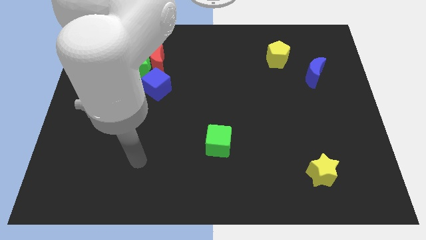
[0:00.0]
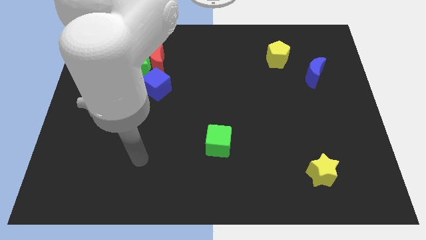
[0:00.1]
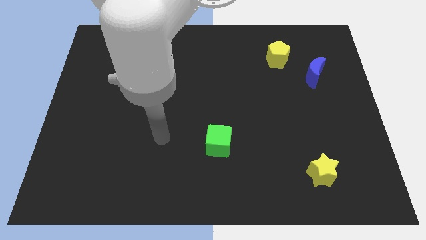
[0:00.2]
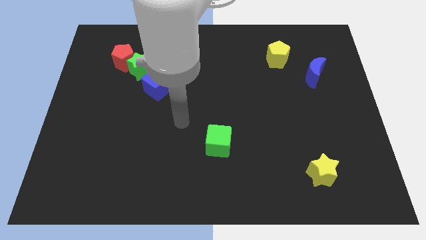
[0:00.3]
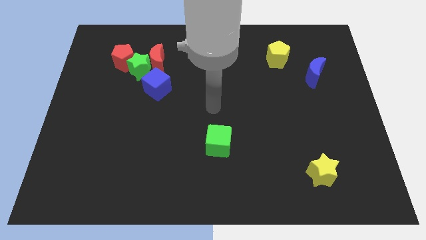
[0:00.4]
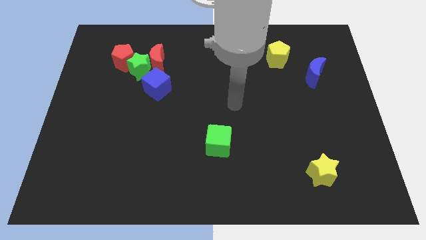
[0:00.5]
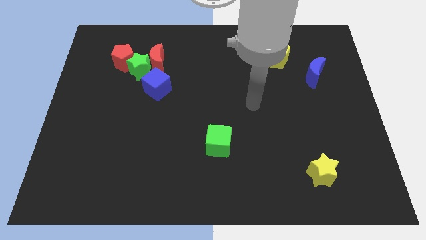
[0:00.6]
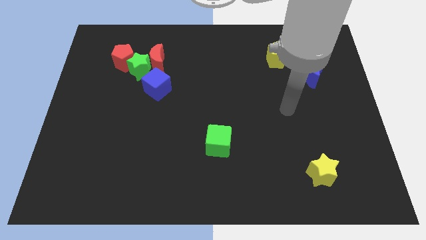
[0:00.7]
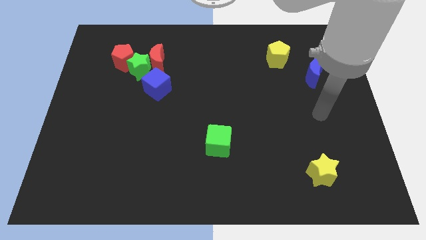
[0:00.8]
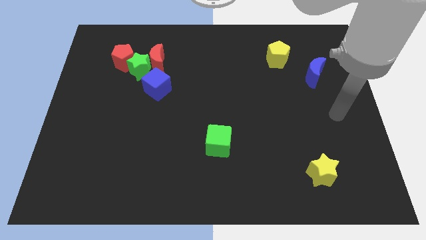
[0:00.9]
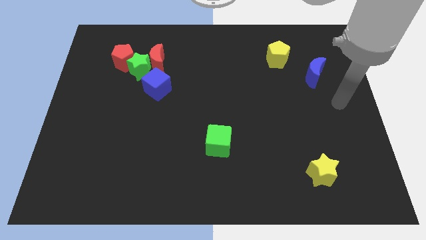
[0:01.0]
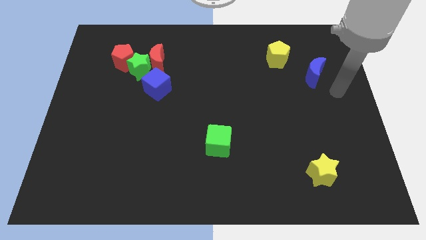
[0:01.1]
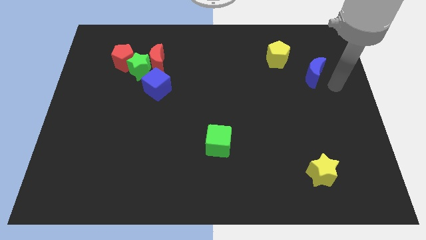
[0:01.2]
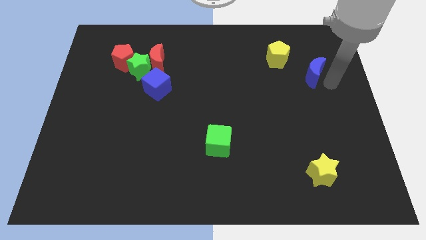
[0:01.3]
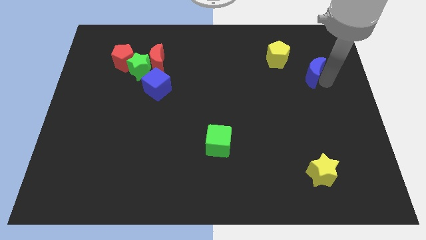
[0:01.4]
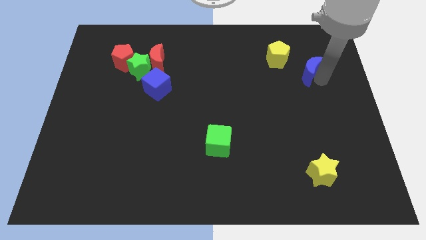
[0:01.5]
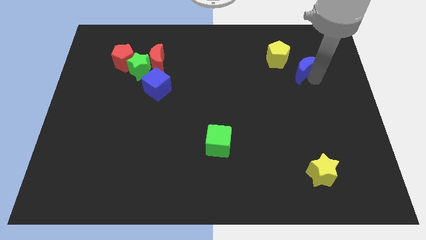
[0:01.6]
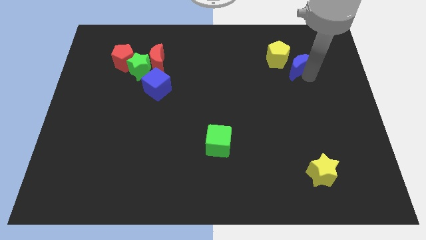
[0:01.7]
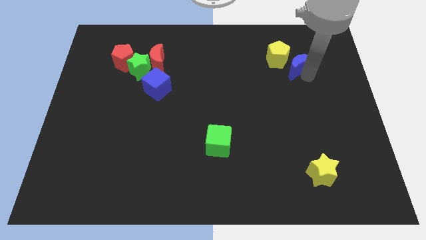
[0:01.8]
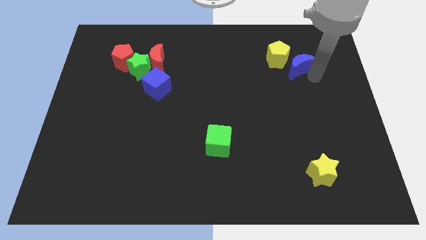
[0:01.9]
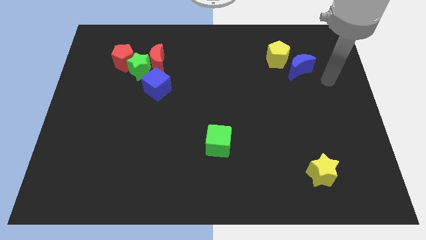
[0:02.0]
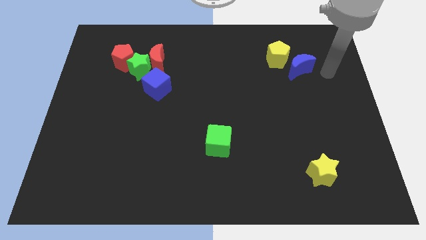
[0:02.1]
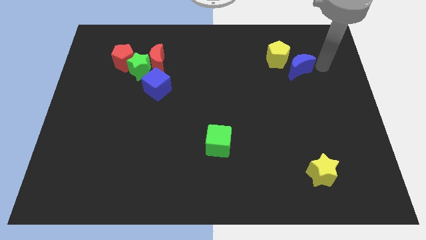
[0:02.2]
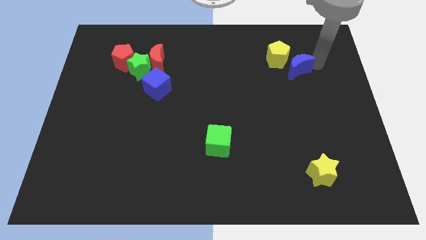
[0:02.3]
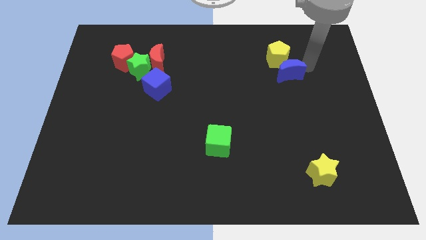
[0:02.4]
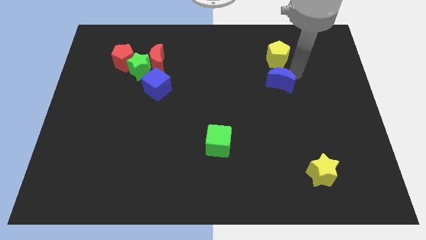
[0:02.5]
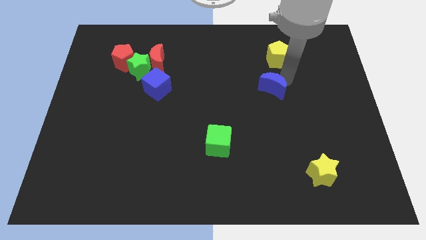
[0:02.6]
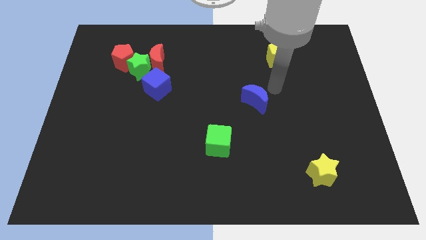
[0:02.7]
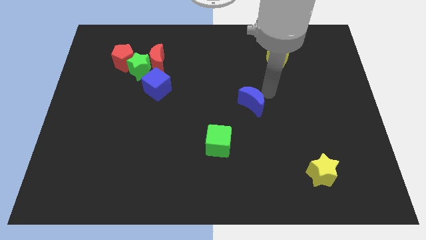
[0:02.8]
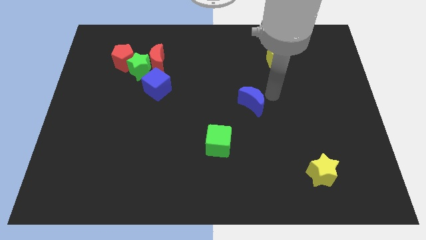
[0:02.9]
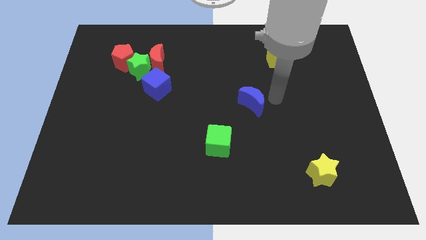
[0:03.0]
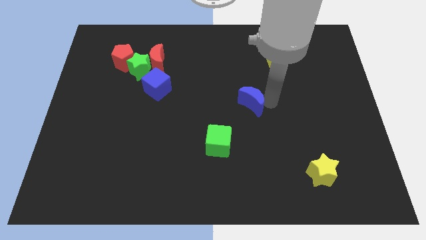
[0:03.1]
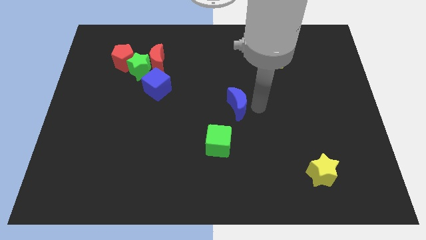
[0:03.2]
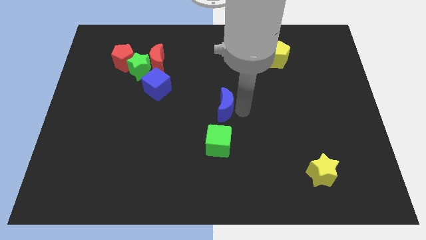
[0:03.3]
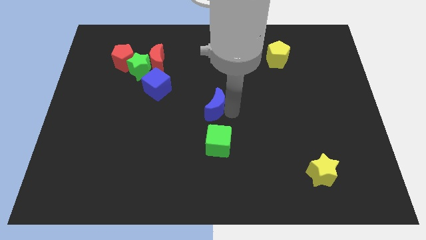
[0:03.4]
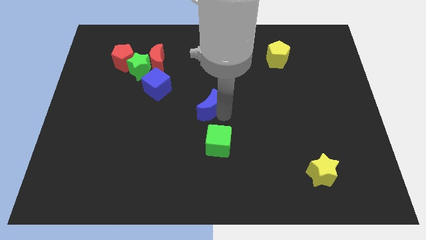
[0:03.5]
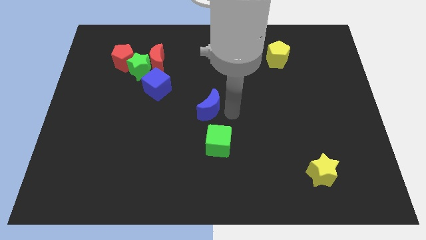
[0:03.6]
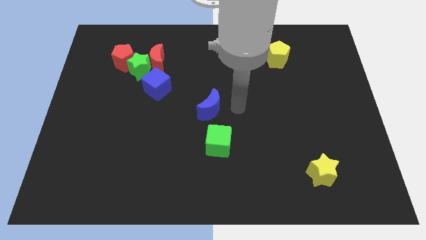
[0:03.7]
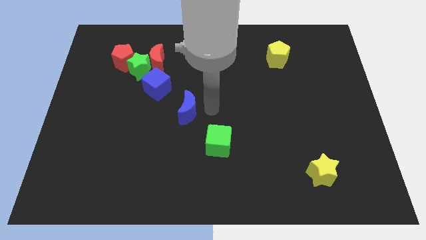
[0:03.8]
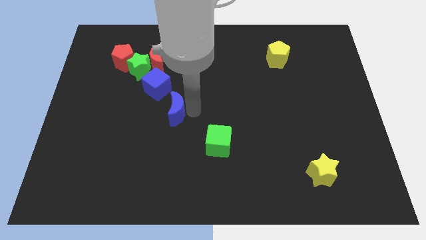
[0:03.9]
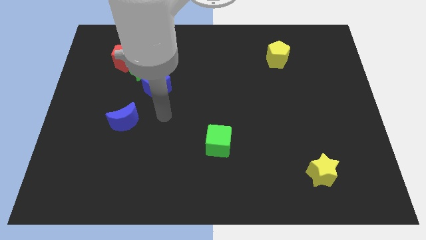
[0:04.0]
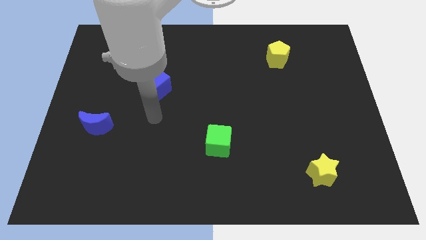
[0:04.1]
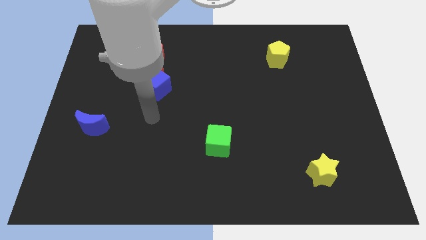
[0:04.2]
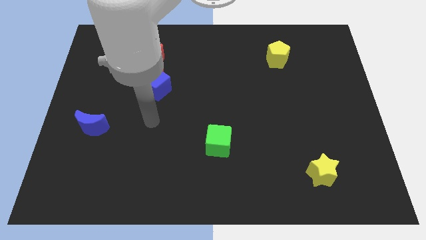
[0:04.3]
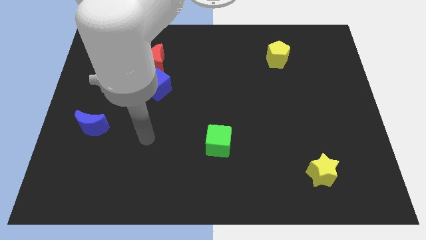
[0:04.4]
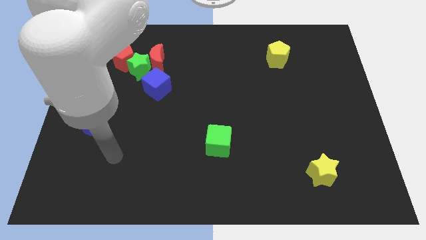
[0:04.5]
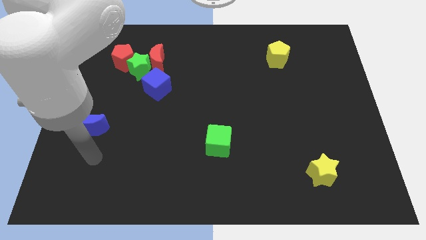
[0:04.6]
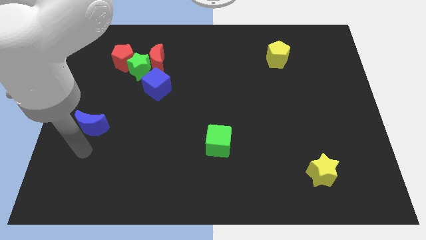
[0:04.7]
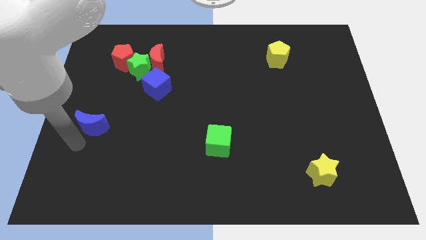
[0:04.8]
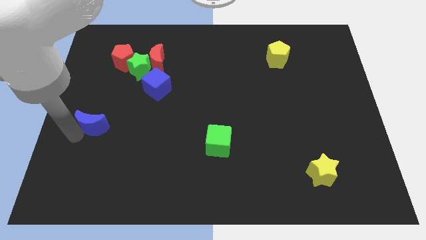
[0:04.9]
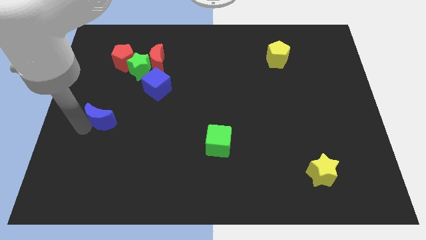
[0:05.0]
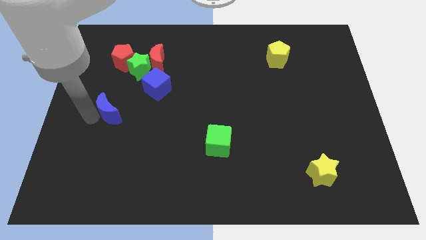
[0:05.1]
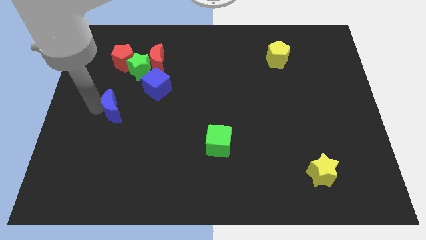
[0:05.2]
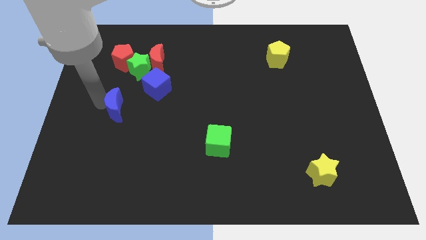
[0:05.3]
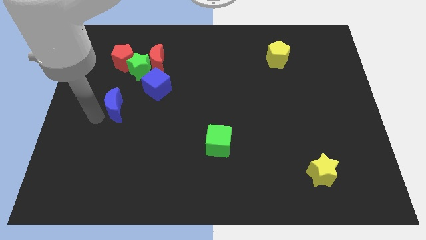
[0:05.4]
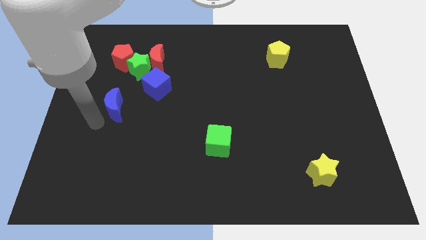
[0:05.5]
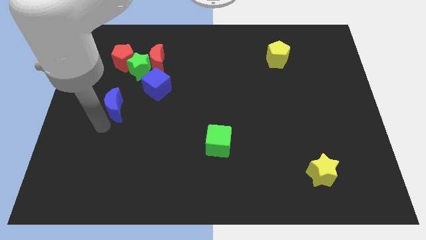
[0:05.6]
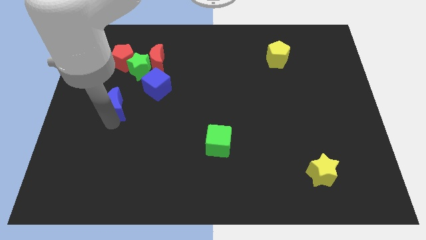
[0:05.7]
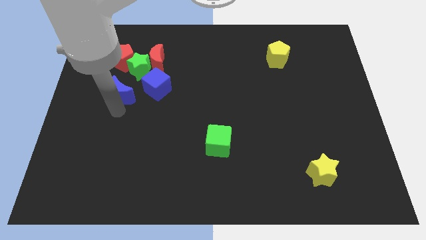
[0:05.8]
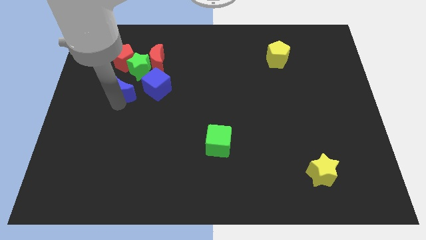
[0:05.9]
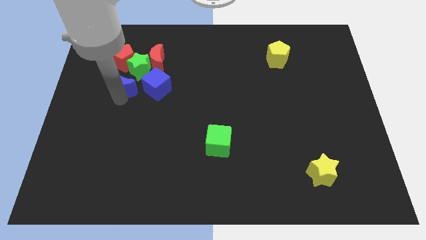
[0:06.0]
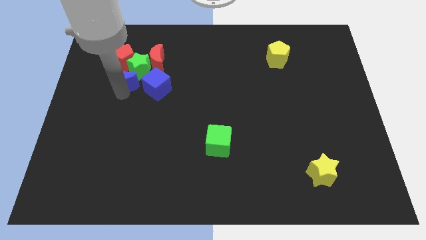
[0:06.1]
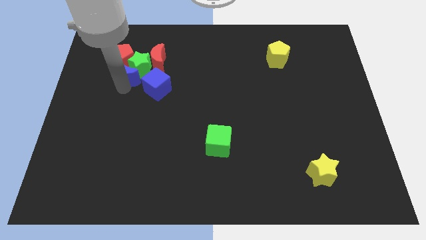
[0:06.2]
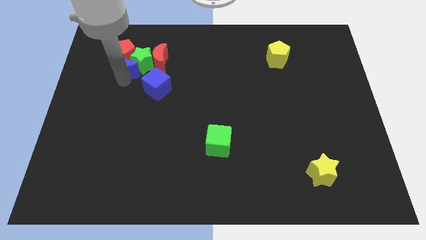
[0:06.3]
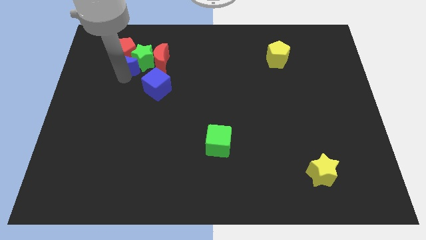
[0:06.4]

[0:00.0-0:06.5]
move the blue moon to the red pentagon

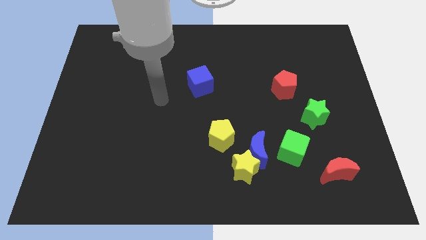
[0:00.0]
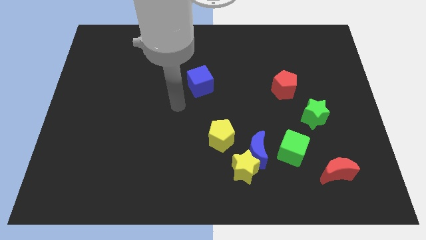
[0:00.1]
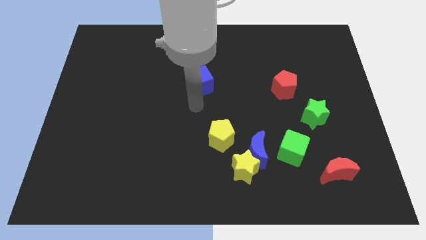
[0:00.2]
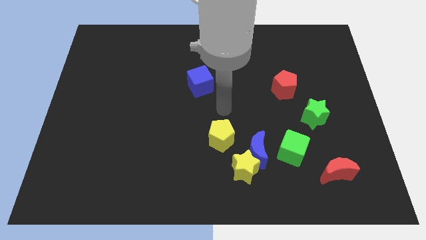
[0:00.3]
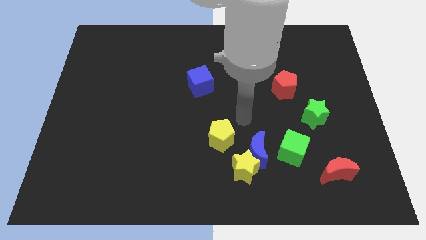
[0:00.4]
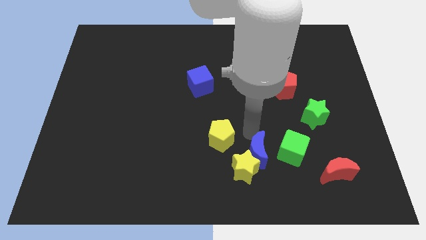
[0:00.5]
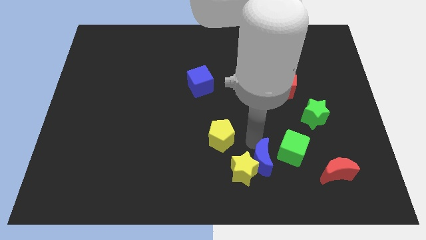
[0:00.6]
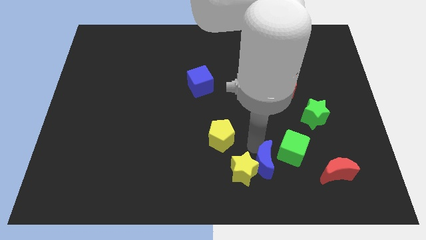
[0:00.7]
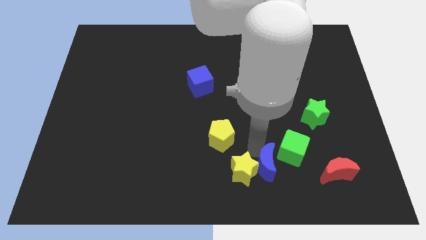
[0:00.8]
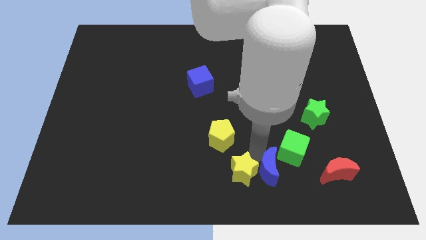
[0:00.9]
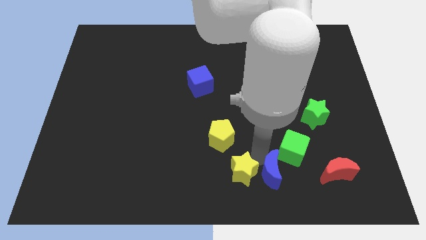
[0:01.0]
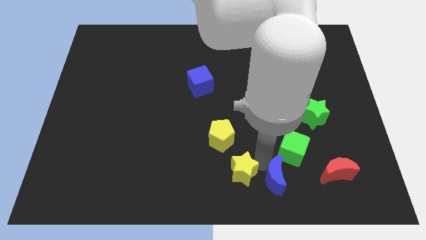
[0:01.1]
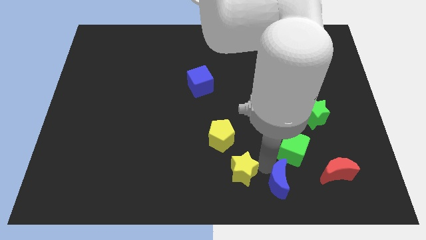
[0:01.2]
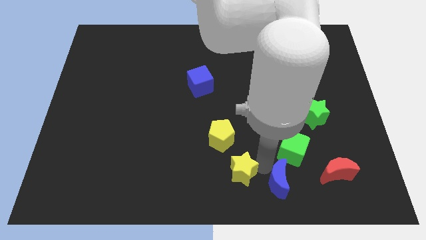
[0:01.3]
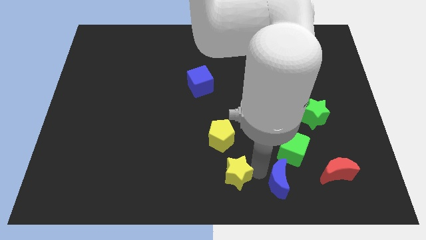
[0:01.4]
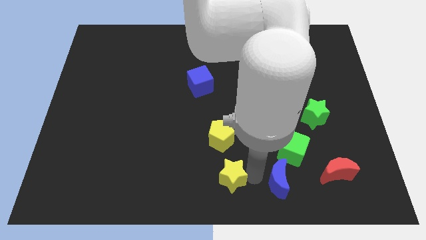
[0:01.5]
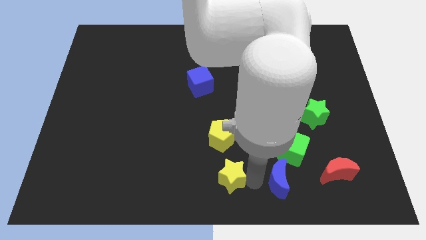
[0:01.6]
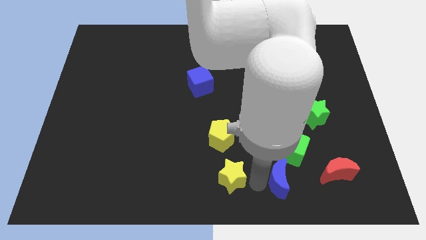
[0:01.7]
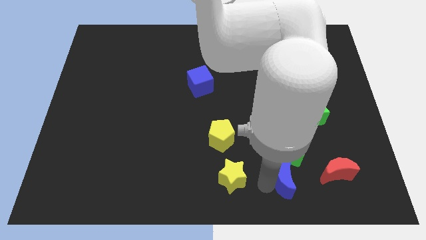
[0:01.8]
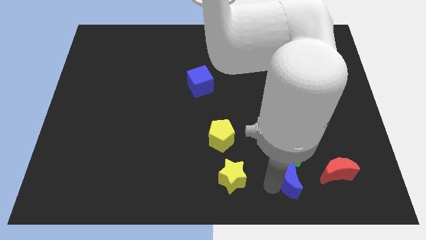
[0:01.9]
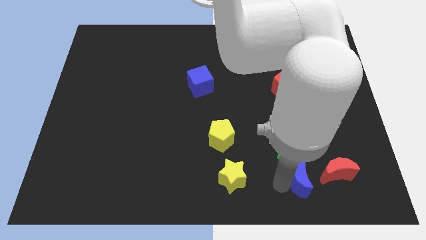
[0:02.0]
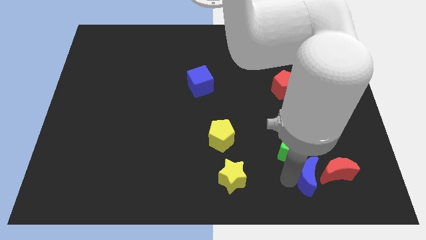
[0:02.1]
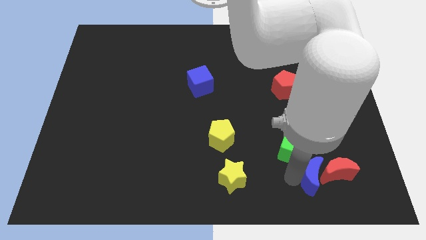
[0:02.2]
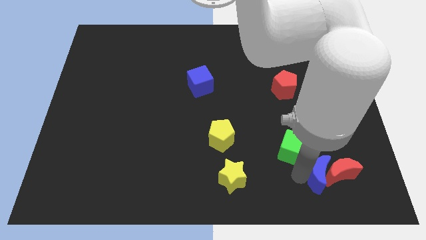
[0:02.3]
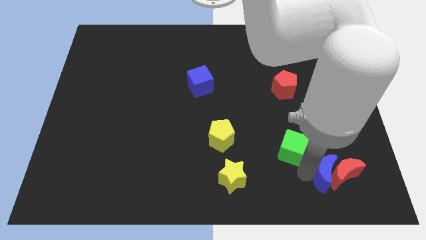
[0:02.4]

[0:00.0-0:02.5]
push the blue moon towards the red moon
